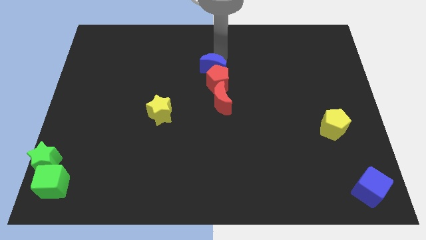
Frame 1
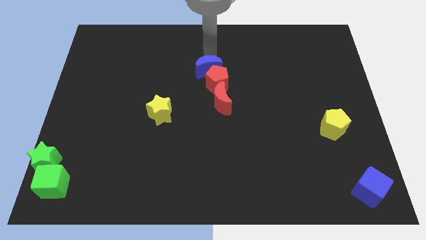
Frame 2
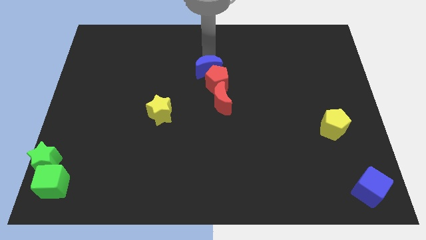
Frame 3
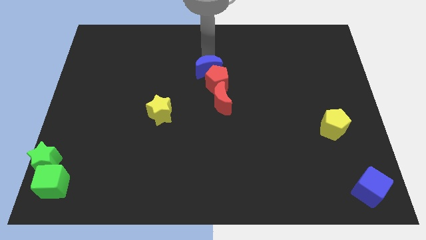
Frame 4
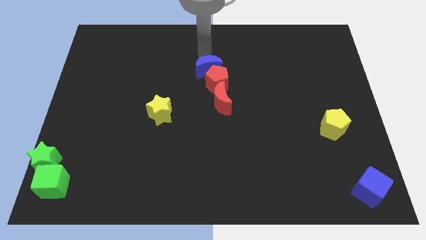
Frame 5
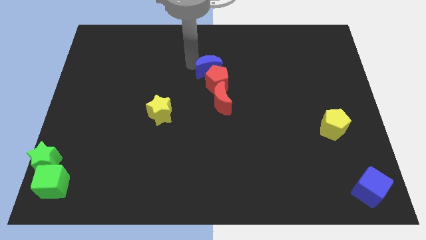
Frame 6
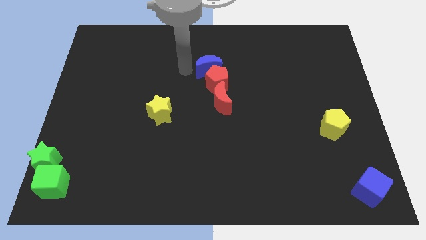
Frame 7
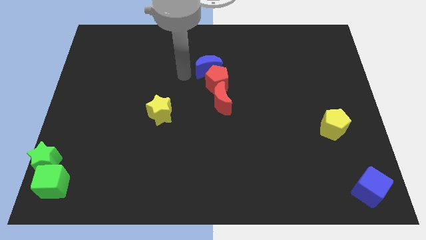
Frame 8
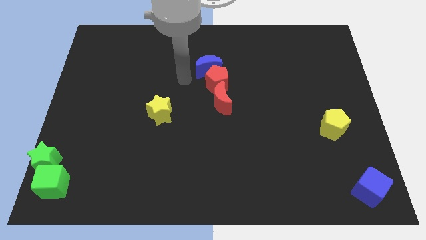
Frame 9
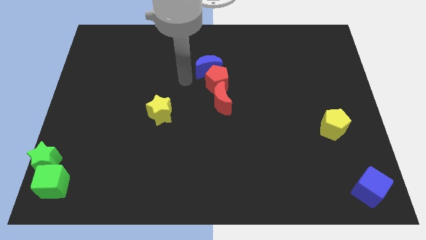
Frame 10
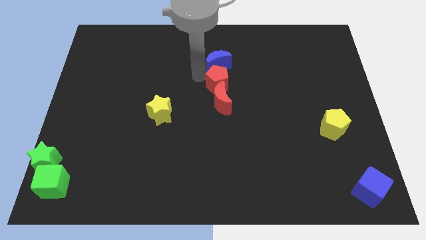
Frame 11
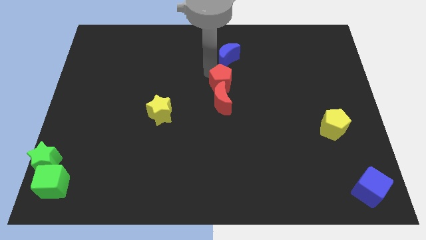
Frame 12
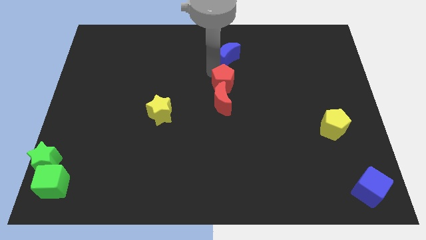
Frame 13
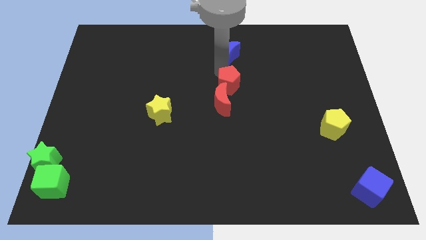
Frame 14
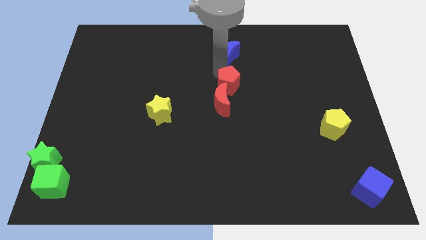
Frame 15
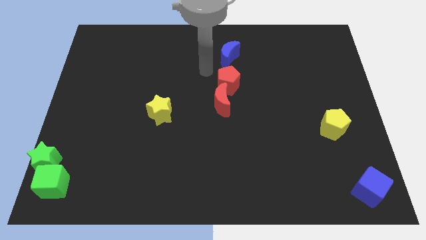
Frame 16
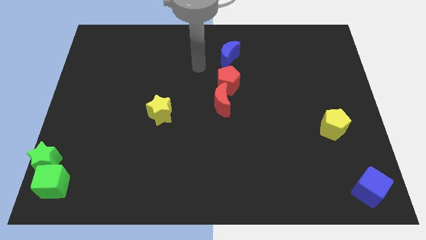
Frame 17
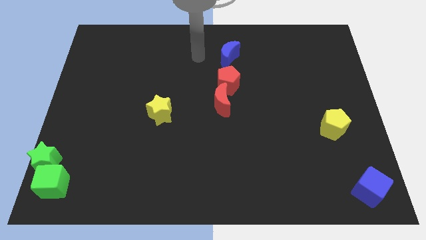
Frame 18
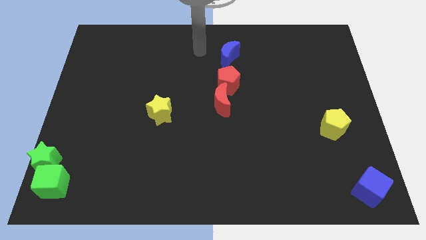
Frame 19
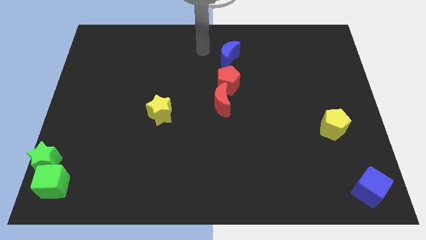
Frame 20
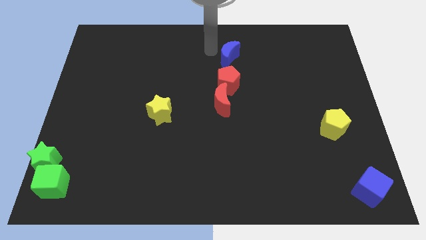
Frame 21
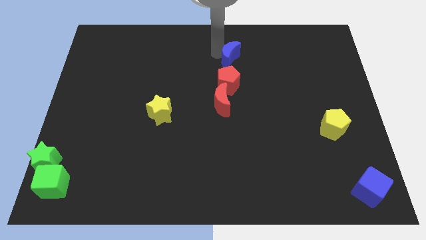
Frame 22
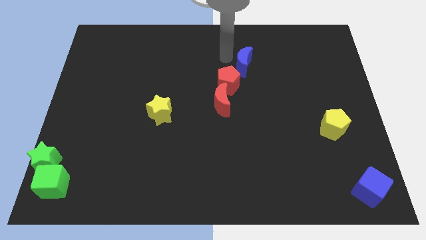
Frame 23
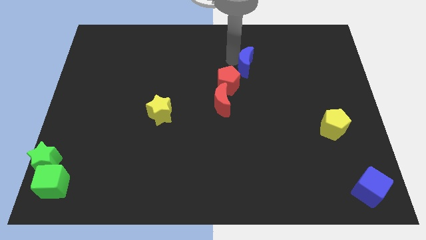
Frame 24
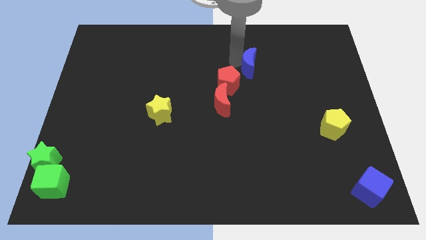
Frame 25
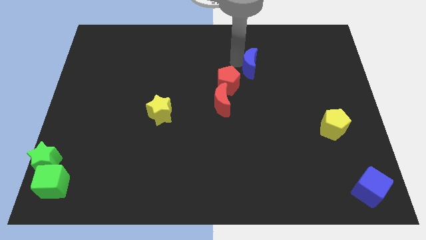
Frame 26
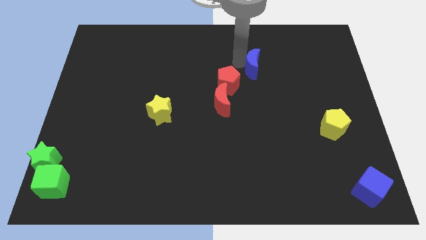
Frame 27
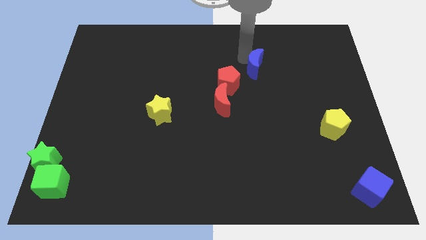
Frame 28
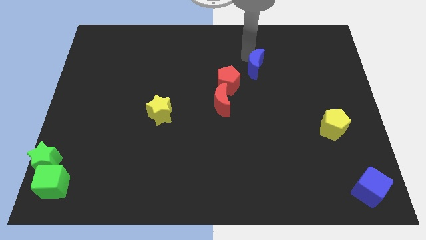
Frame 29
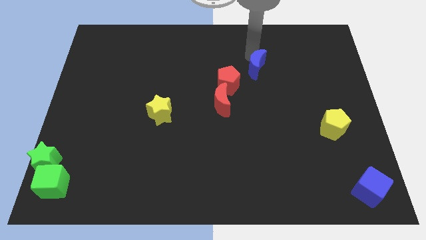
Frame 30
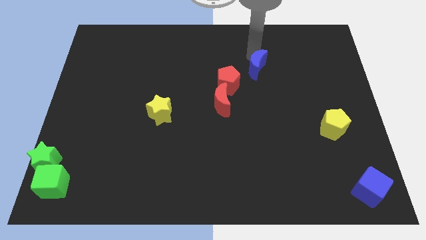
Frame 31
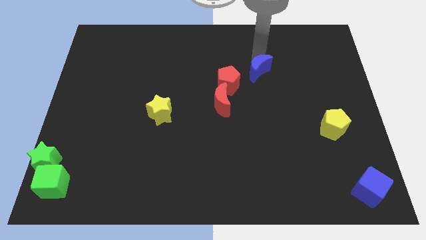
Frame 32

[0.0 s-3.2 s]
push the blue moon diagonally top right to red pentagon

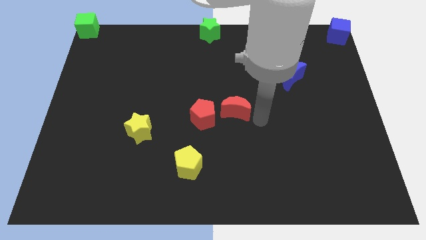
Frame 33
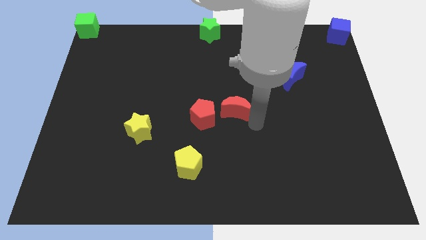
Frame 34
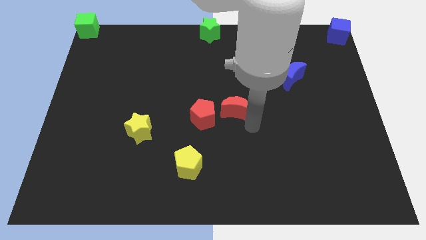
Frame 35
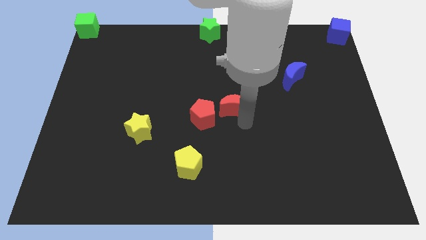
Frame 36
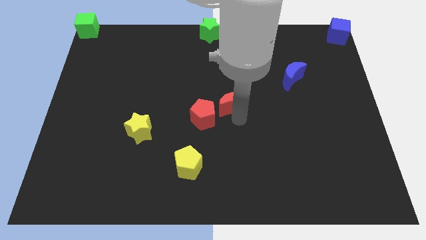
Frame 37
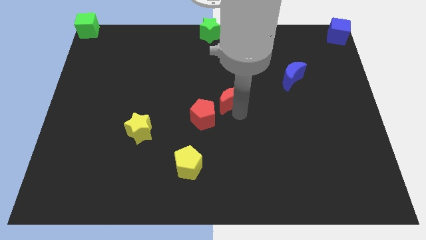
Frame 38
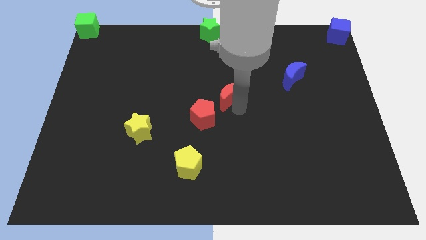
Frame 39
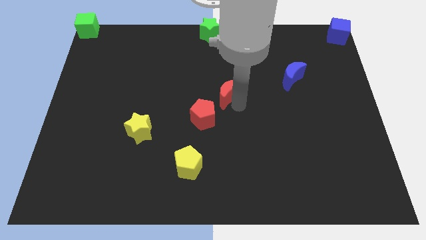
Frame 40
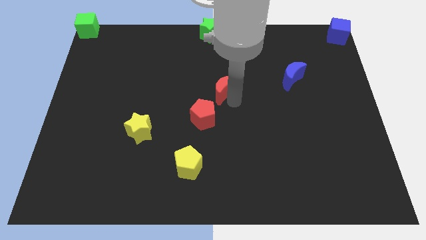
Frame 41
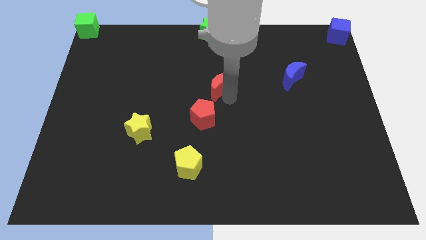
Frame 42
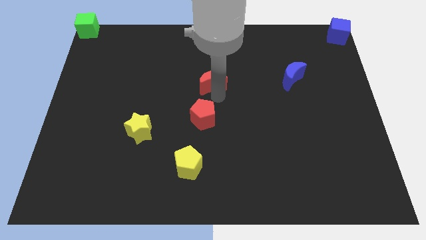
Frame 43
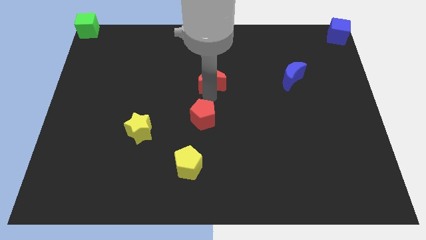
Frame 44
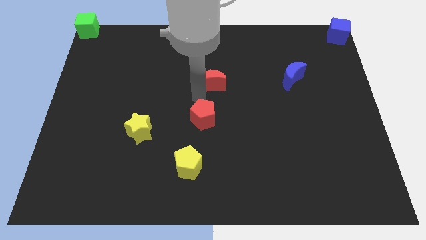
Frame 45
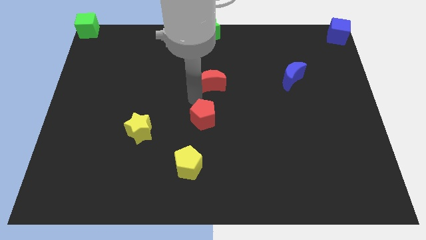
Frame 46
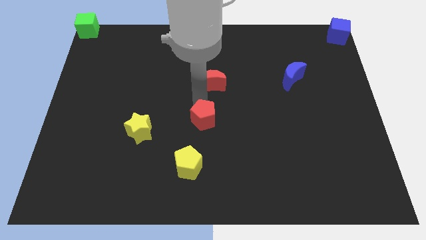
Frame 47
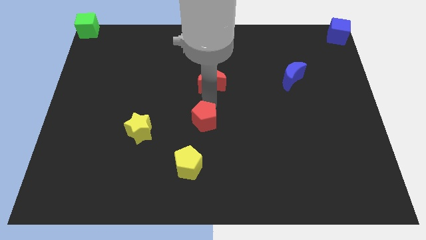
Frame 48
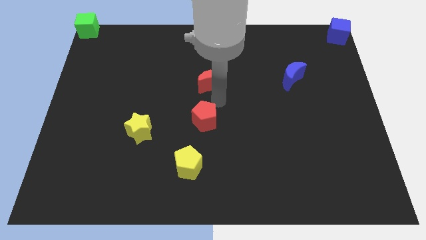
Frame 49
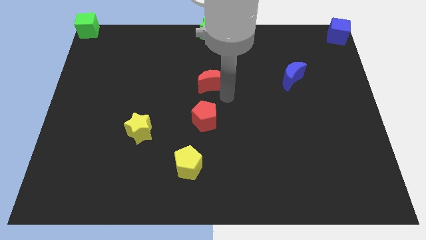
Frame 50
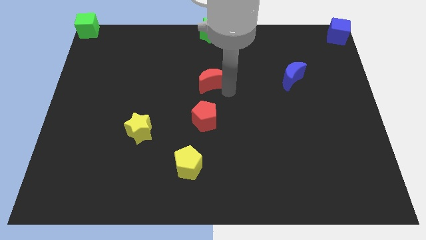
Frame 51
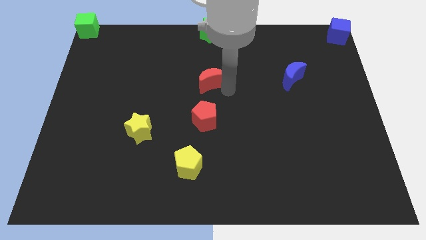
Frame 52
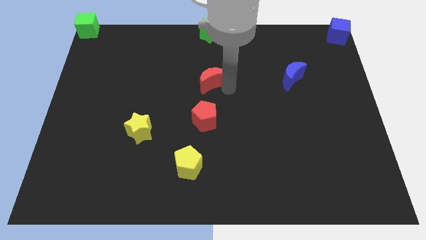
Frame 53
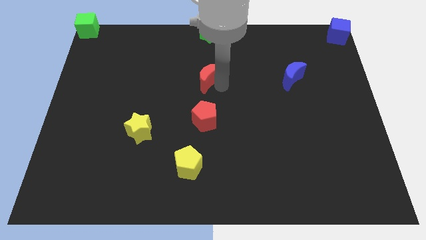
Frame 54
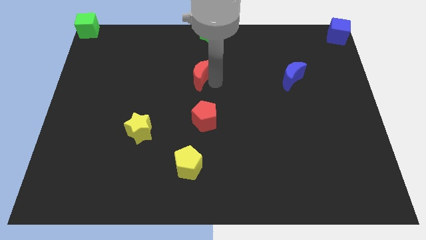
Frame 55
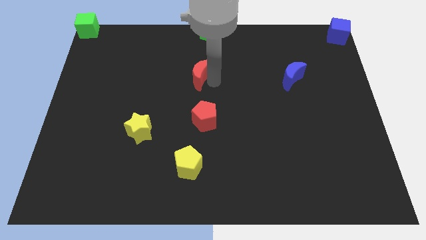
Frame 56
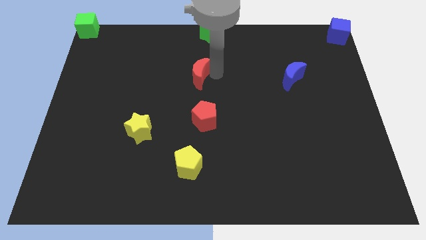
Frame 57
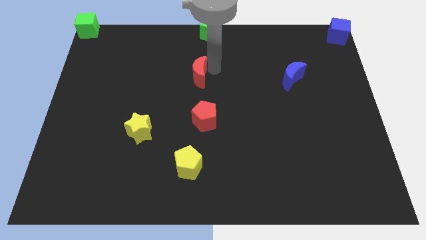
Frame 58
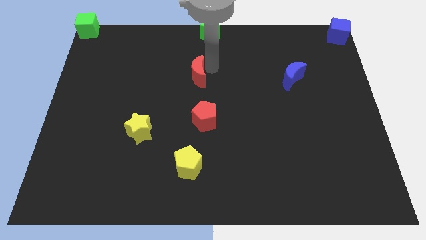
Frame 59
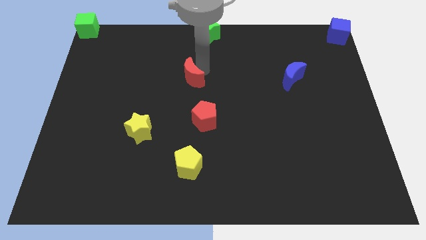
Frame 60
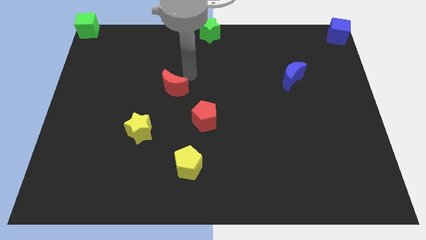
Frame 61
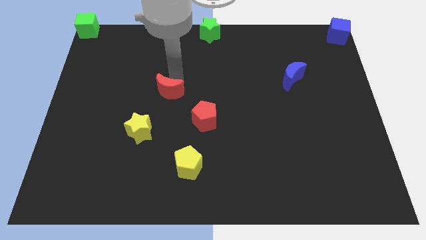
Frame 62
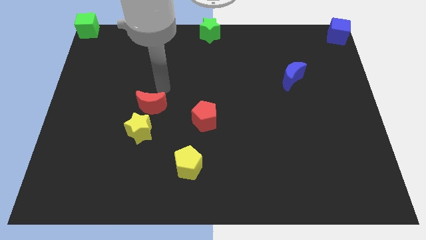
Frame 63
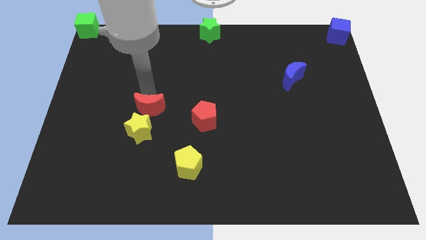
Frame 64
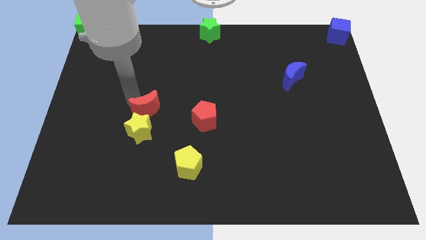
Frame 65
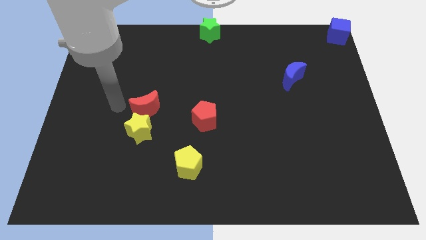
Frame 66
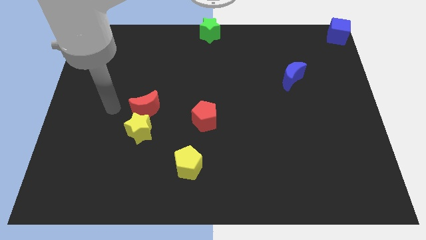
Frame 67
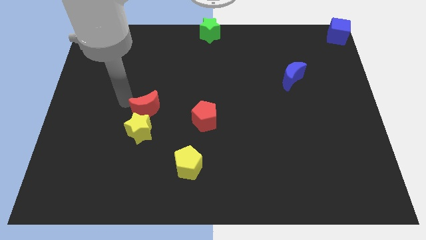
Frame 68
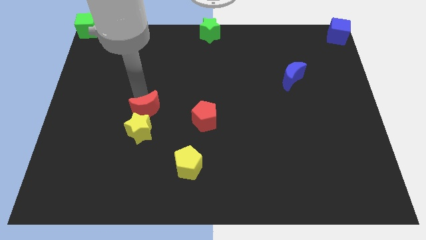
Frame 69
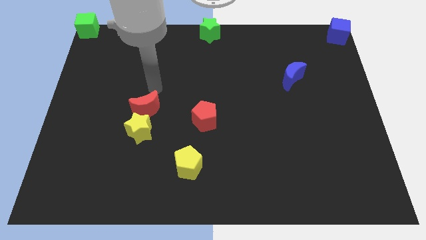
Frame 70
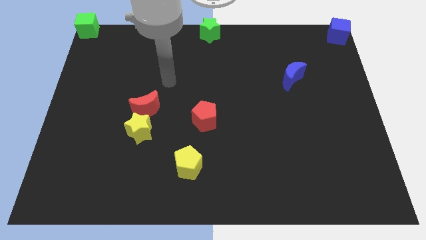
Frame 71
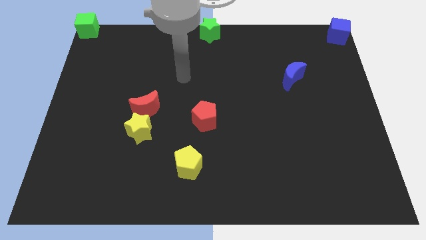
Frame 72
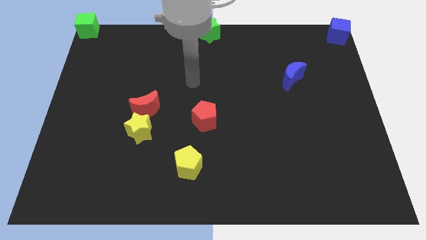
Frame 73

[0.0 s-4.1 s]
slide red moon on top of yellow star

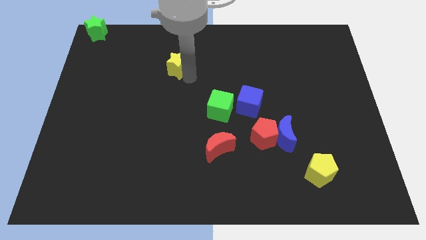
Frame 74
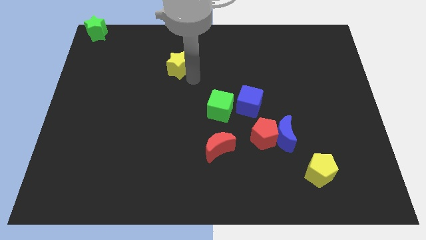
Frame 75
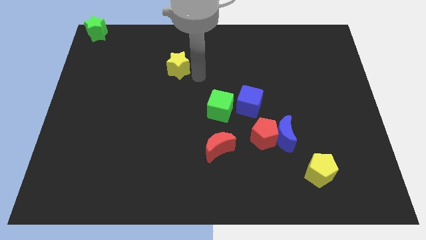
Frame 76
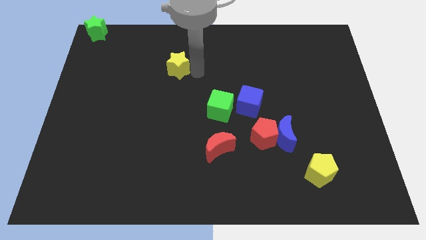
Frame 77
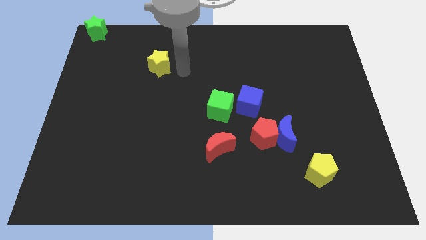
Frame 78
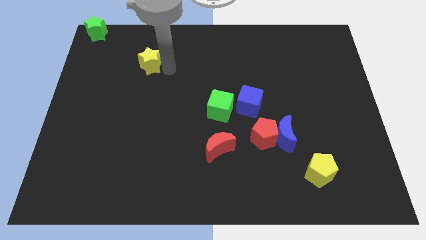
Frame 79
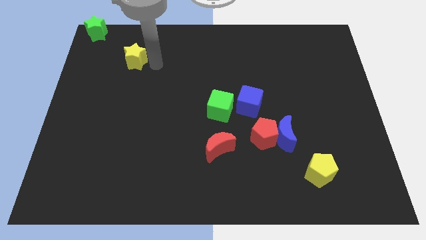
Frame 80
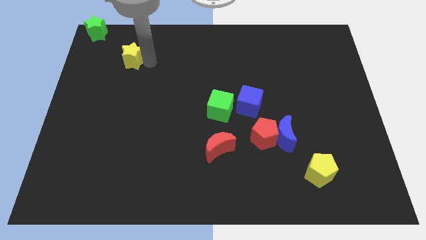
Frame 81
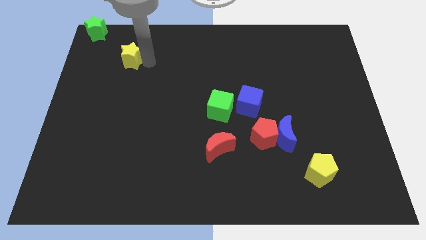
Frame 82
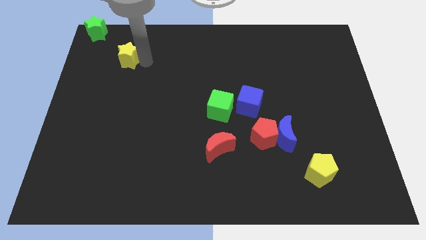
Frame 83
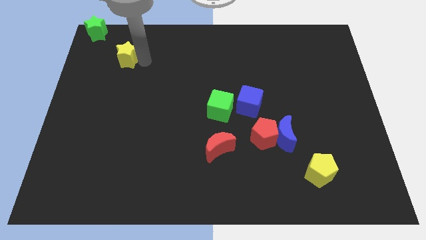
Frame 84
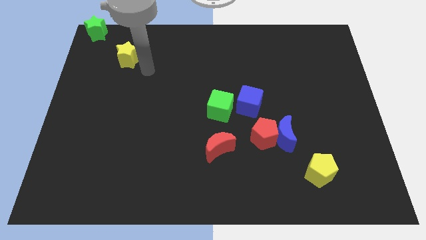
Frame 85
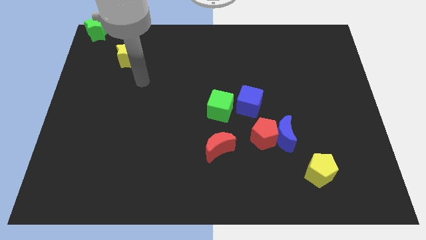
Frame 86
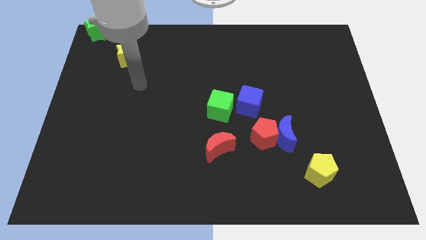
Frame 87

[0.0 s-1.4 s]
slide the yellow star diagonally on the bottom right side of the green star

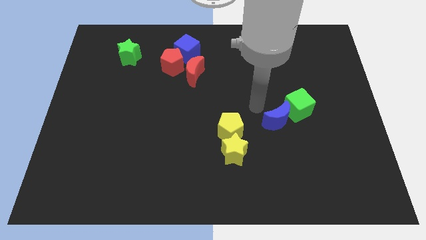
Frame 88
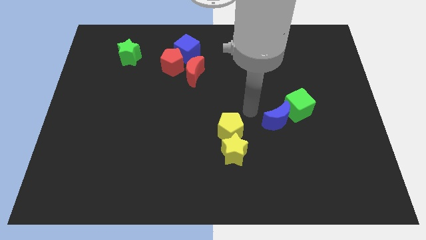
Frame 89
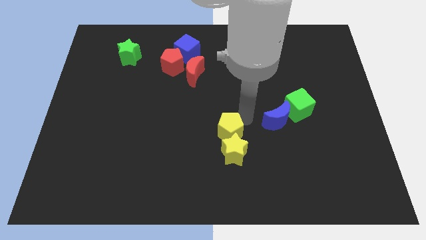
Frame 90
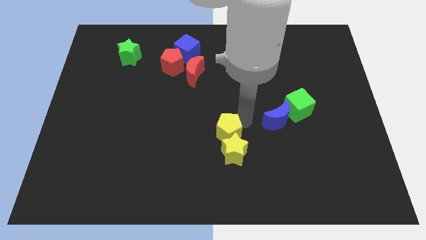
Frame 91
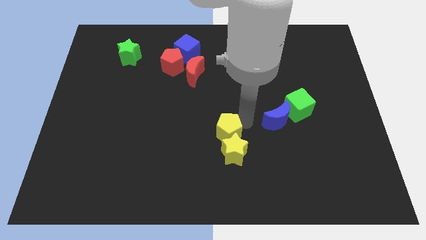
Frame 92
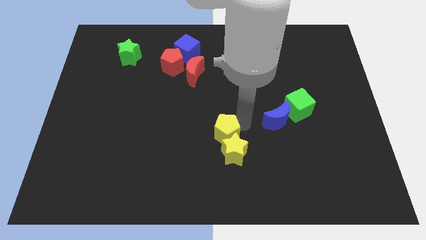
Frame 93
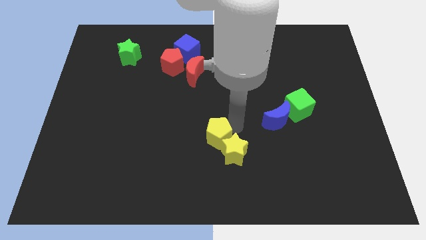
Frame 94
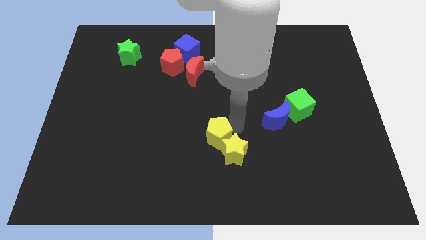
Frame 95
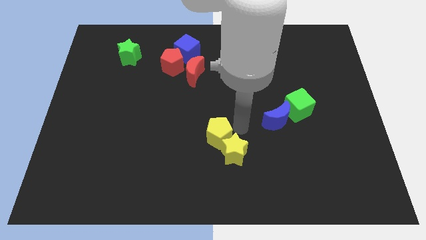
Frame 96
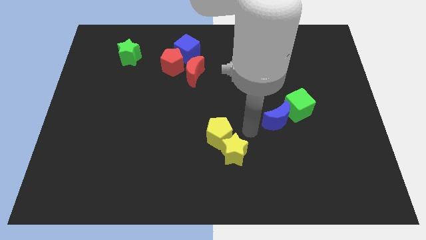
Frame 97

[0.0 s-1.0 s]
put the yellow pentagon to the top right of the yellow star
